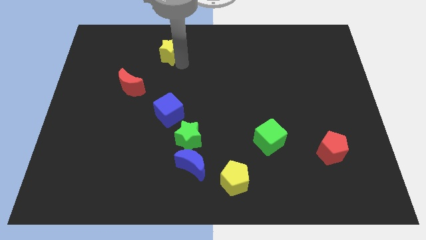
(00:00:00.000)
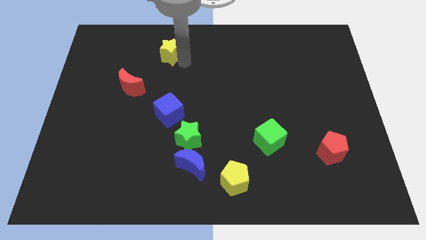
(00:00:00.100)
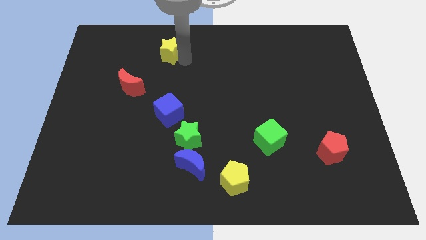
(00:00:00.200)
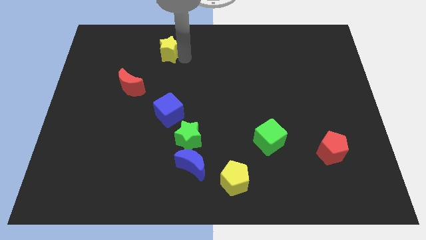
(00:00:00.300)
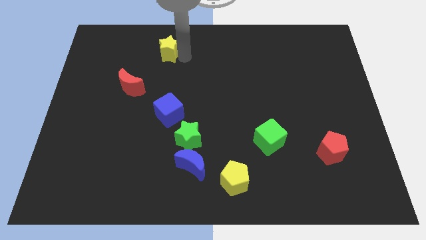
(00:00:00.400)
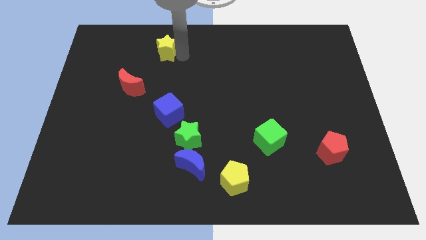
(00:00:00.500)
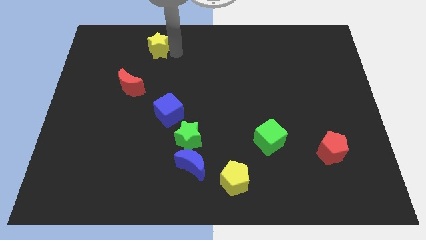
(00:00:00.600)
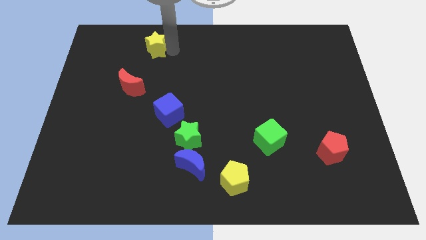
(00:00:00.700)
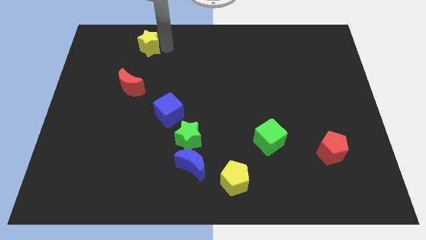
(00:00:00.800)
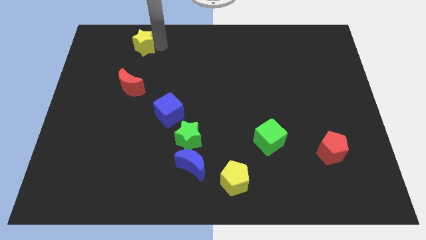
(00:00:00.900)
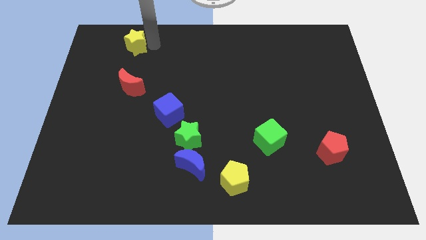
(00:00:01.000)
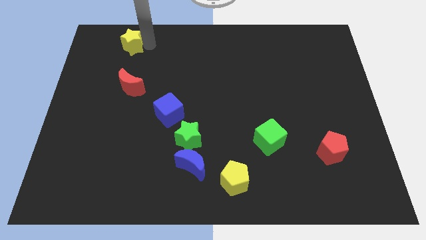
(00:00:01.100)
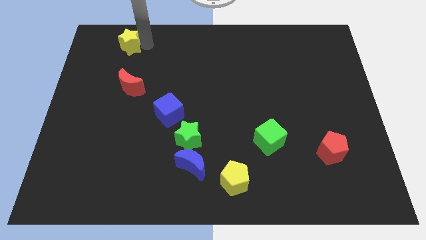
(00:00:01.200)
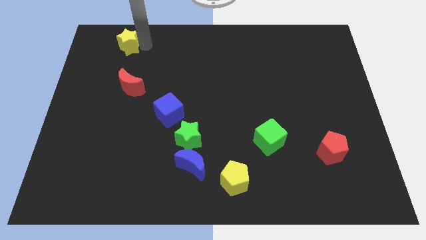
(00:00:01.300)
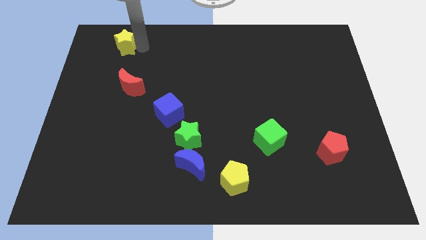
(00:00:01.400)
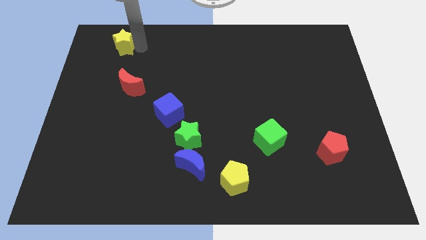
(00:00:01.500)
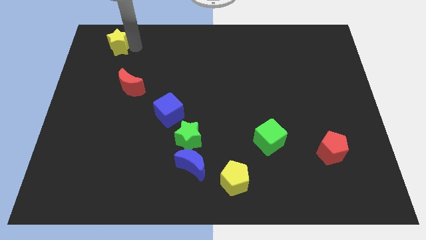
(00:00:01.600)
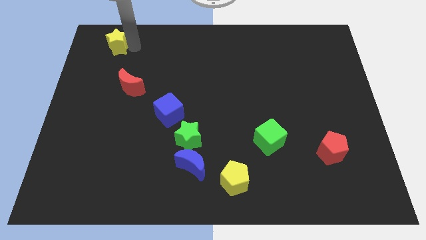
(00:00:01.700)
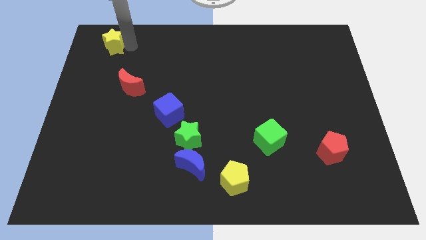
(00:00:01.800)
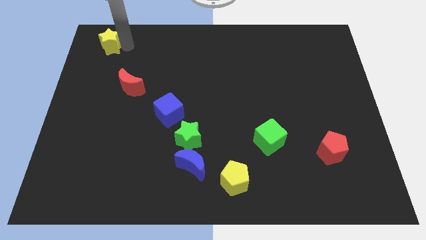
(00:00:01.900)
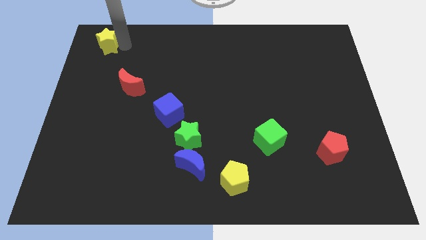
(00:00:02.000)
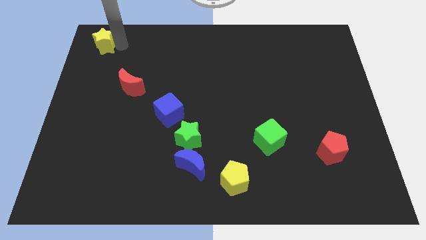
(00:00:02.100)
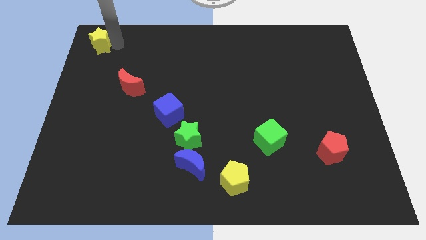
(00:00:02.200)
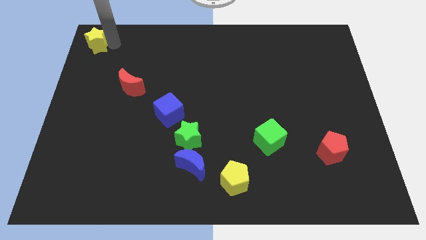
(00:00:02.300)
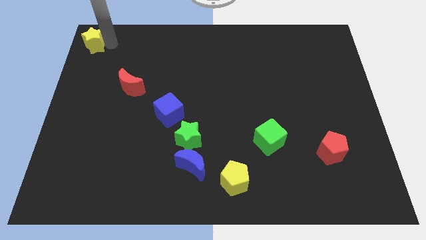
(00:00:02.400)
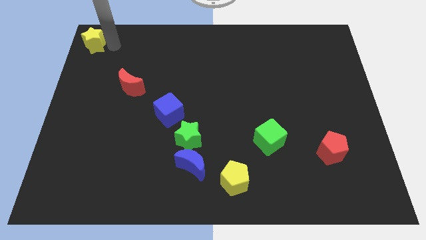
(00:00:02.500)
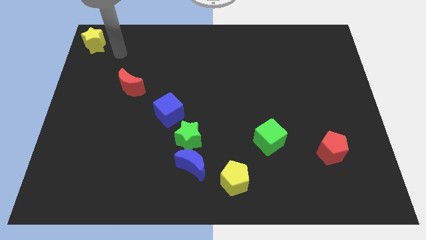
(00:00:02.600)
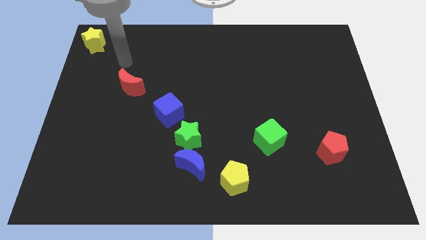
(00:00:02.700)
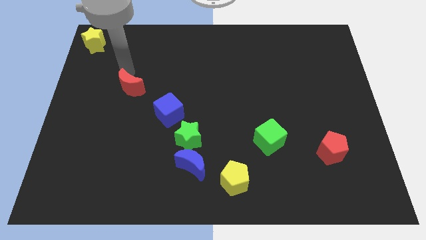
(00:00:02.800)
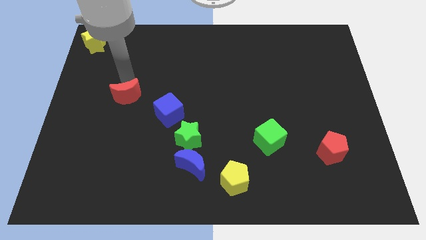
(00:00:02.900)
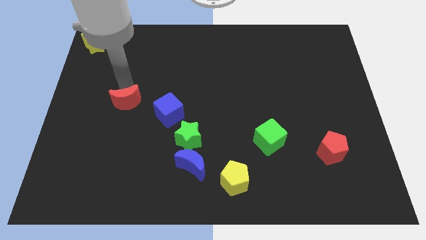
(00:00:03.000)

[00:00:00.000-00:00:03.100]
place a yellow star to the top left corner of the board

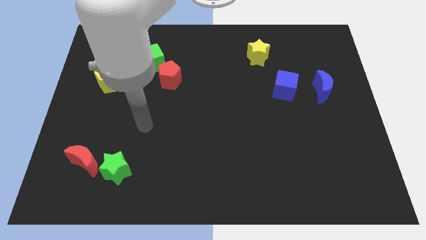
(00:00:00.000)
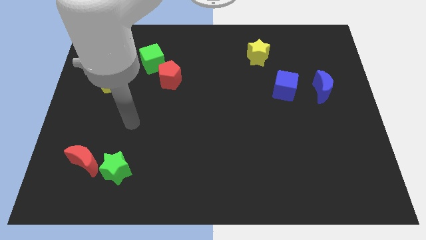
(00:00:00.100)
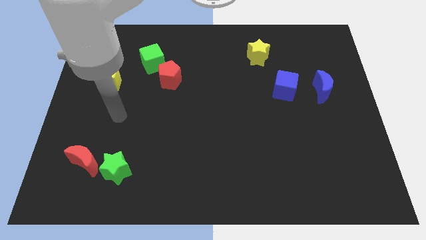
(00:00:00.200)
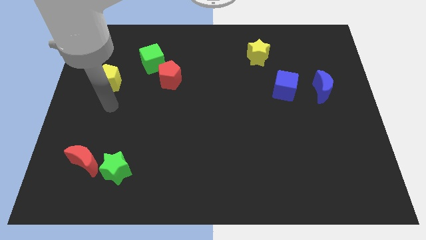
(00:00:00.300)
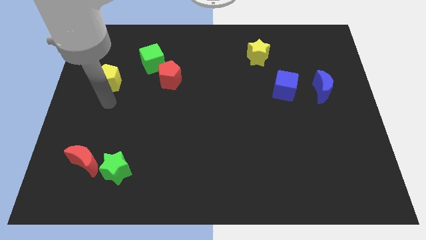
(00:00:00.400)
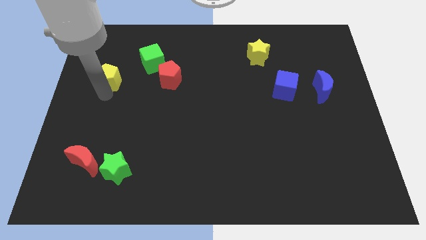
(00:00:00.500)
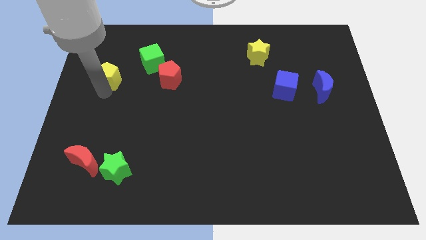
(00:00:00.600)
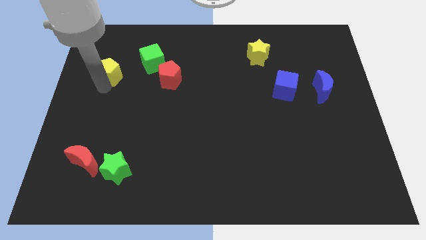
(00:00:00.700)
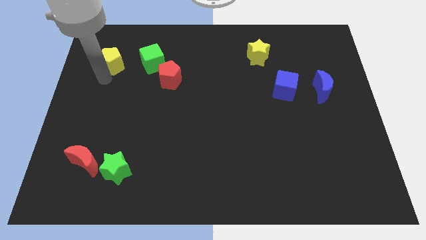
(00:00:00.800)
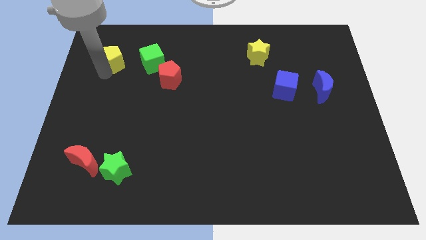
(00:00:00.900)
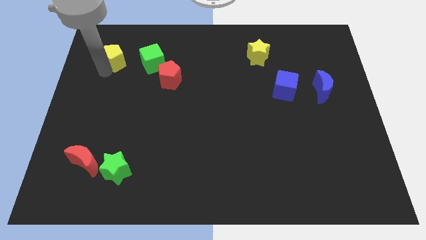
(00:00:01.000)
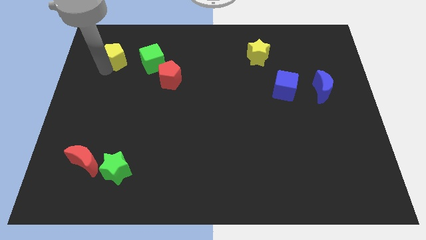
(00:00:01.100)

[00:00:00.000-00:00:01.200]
move the arm towards the yellow pentagon

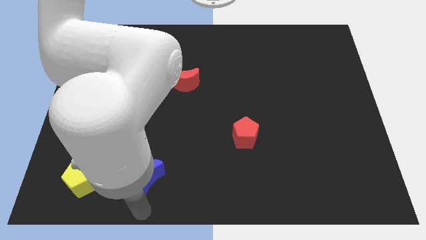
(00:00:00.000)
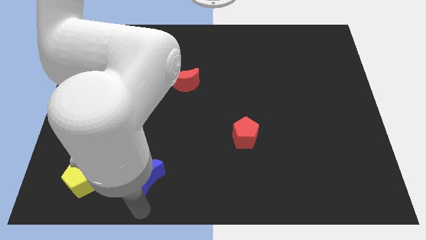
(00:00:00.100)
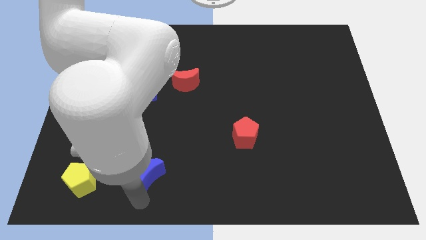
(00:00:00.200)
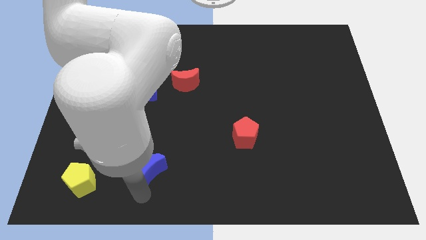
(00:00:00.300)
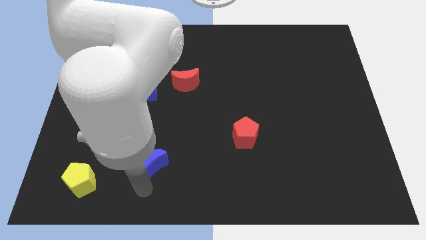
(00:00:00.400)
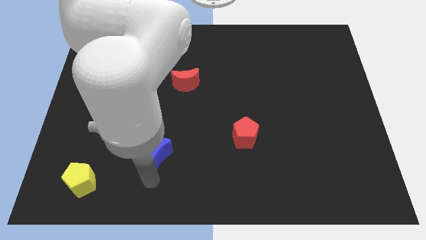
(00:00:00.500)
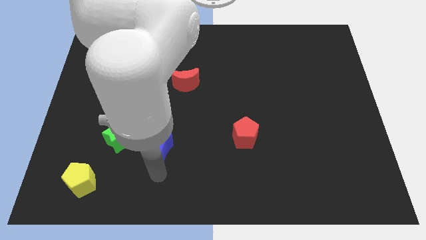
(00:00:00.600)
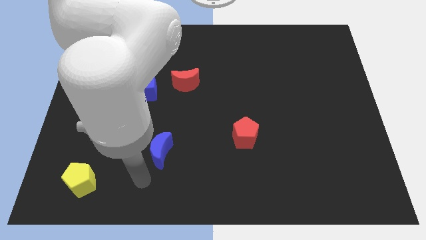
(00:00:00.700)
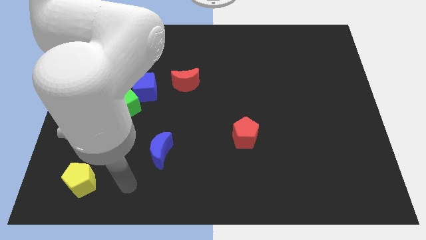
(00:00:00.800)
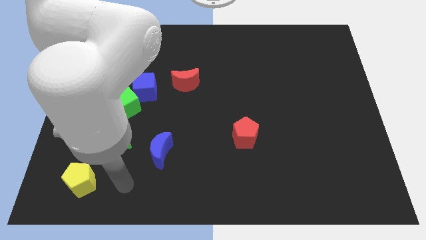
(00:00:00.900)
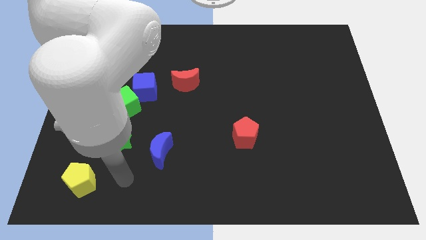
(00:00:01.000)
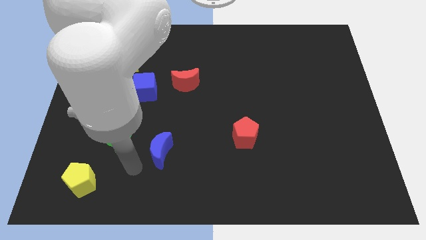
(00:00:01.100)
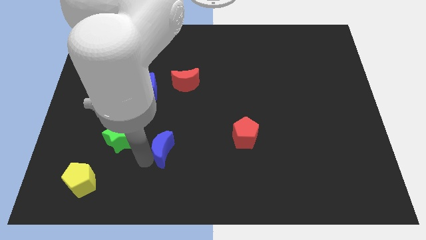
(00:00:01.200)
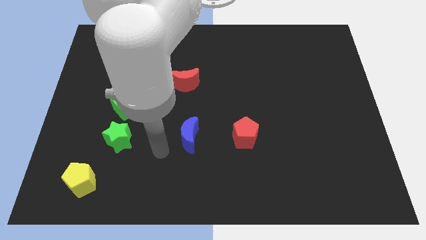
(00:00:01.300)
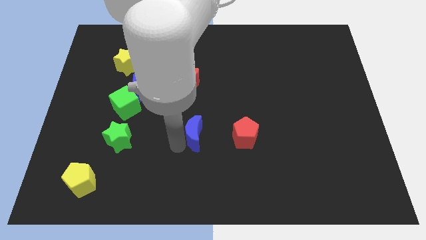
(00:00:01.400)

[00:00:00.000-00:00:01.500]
push the blue moon to the left of the red pentagon

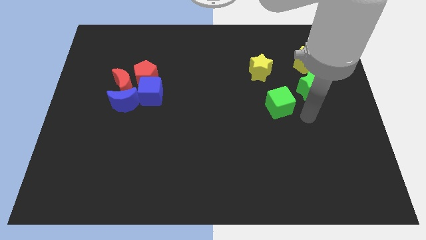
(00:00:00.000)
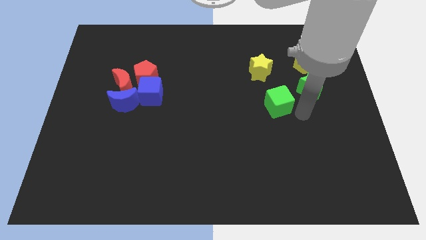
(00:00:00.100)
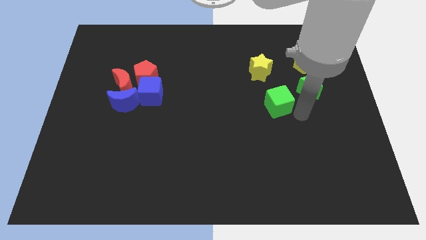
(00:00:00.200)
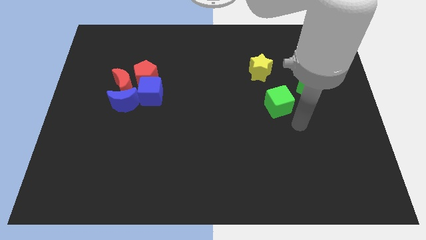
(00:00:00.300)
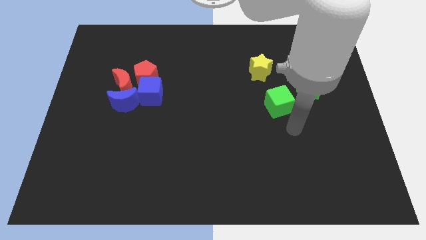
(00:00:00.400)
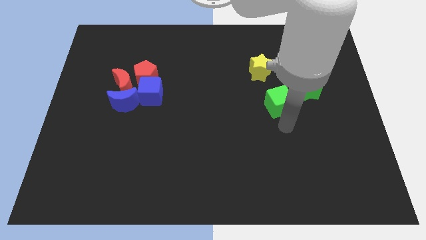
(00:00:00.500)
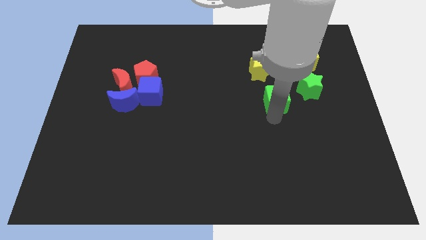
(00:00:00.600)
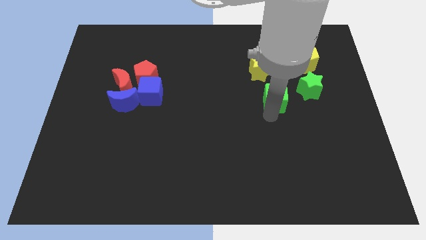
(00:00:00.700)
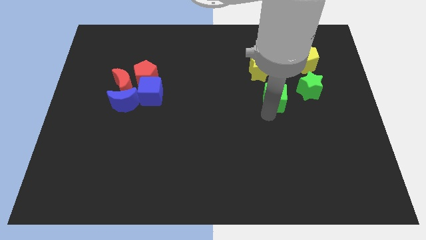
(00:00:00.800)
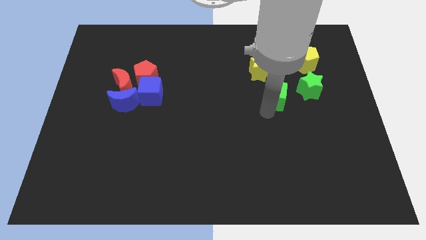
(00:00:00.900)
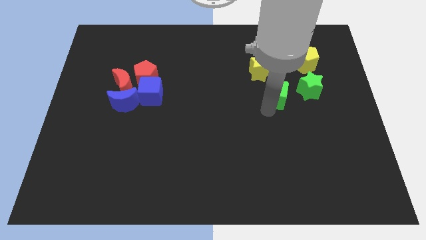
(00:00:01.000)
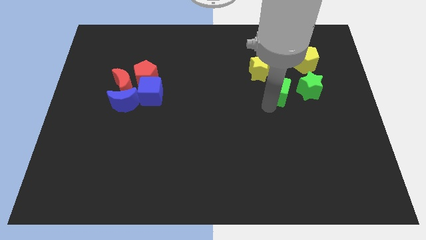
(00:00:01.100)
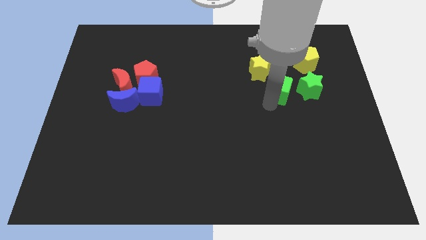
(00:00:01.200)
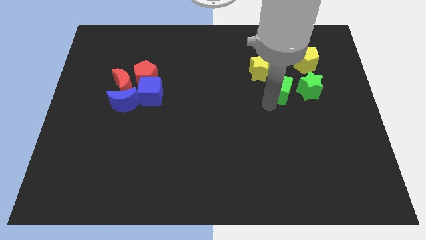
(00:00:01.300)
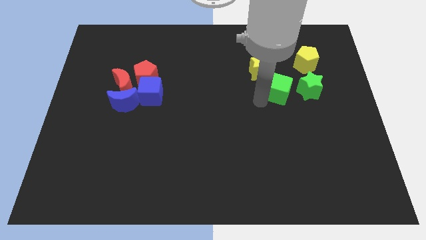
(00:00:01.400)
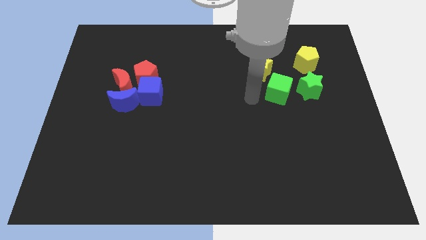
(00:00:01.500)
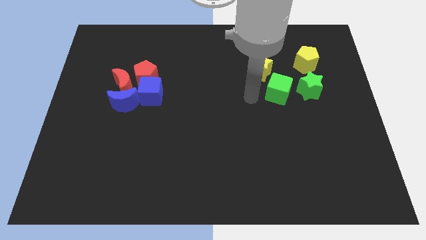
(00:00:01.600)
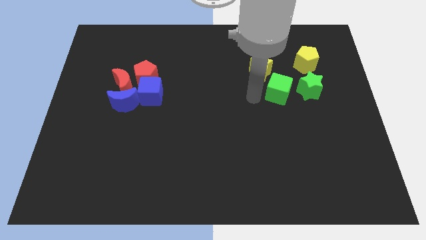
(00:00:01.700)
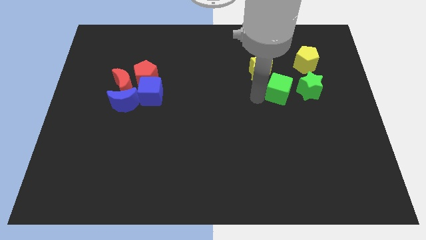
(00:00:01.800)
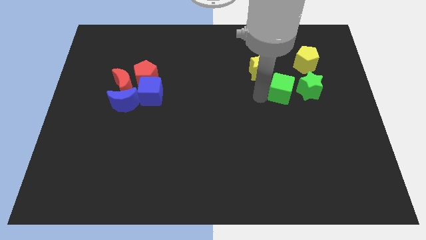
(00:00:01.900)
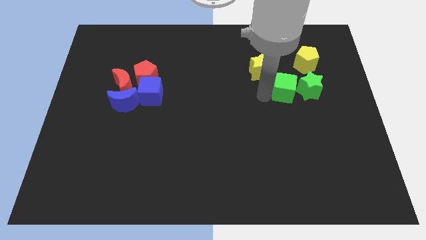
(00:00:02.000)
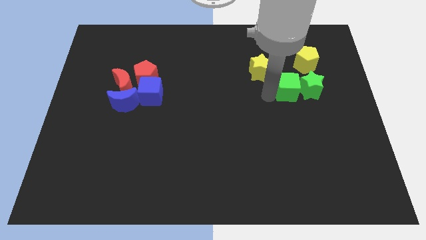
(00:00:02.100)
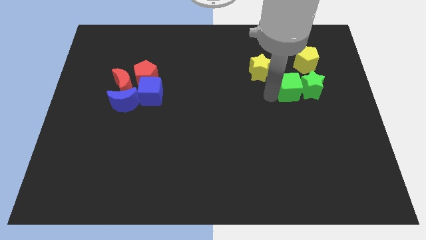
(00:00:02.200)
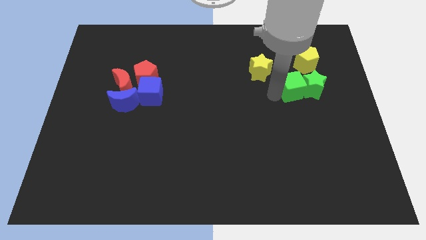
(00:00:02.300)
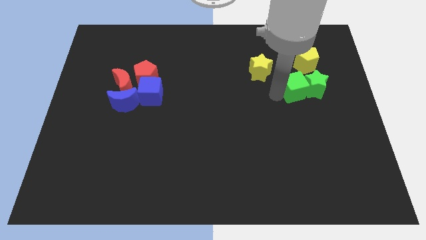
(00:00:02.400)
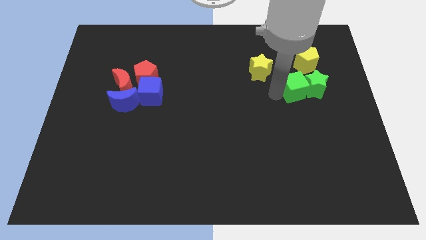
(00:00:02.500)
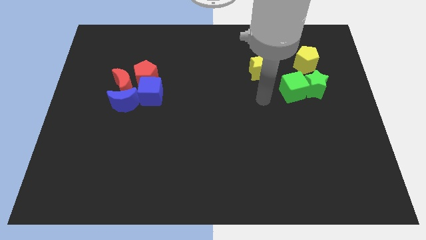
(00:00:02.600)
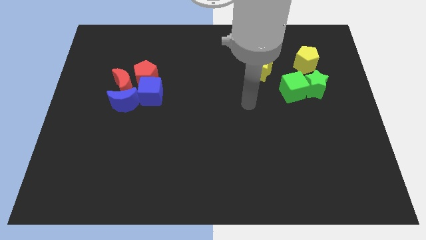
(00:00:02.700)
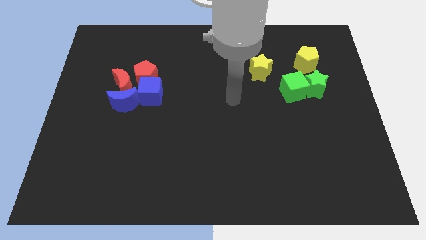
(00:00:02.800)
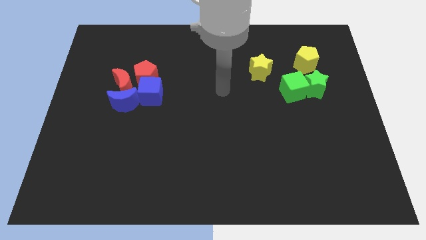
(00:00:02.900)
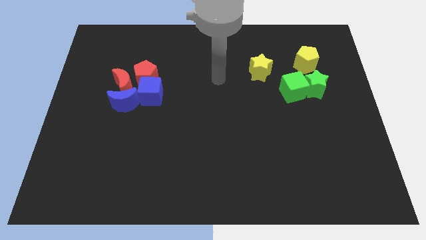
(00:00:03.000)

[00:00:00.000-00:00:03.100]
add green cube into green star

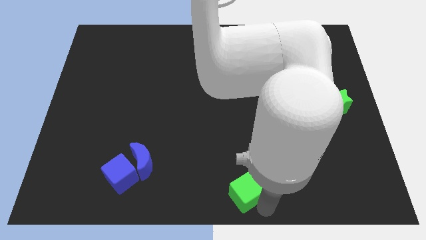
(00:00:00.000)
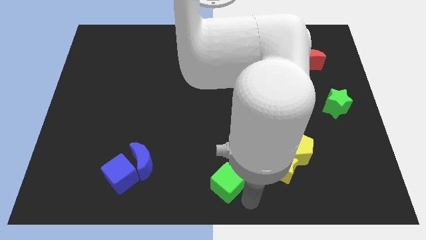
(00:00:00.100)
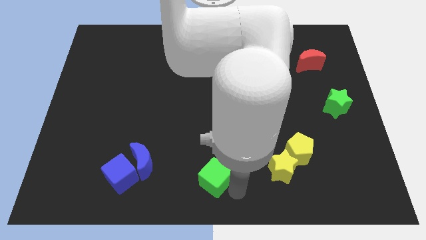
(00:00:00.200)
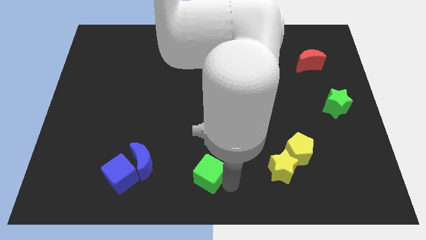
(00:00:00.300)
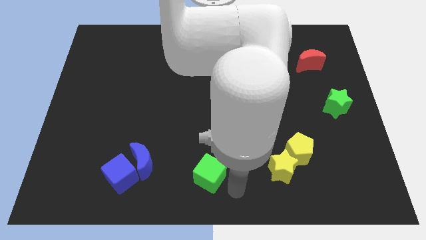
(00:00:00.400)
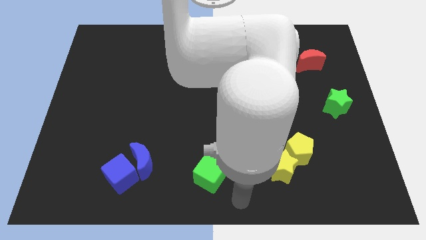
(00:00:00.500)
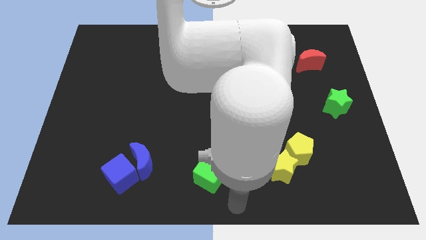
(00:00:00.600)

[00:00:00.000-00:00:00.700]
move green cube slightly to the left
